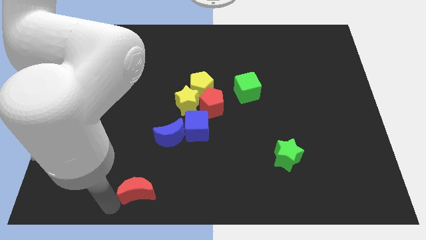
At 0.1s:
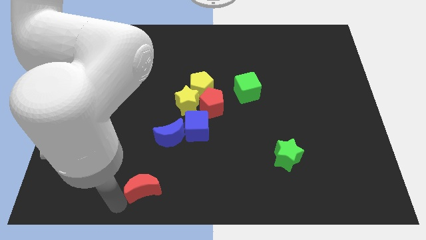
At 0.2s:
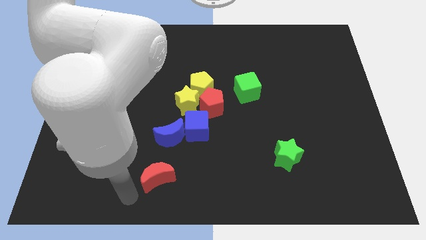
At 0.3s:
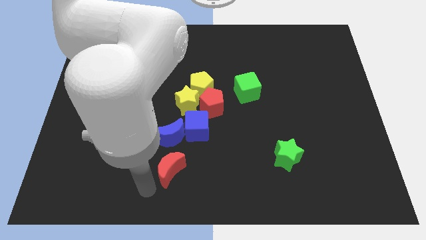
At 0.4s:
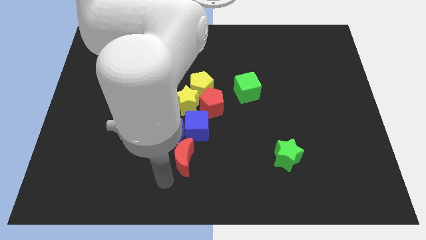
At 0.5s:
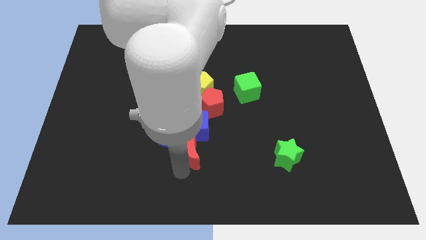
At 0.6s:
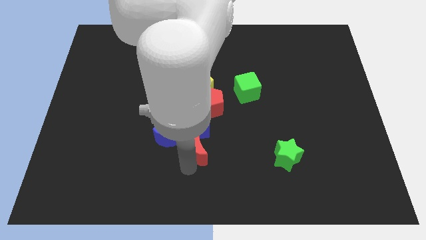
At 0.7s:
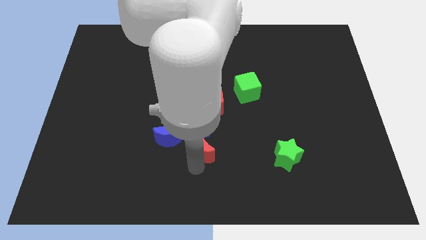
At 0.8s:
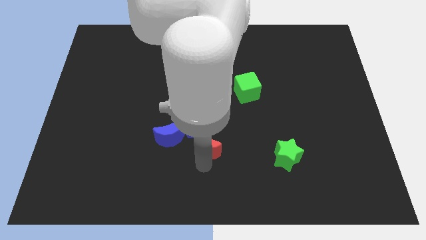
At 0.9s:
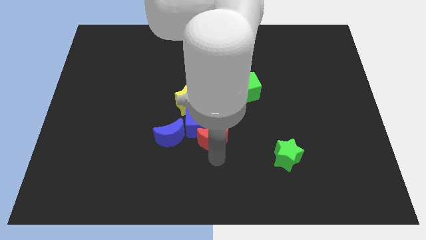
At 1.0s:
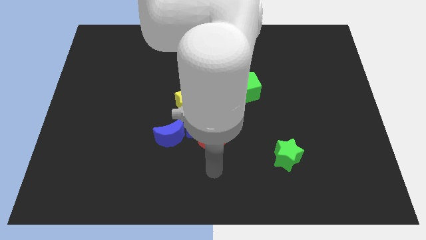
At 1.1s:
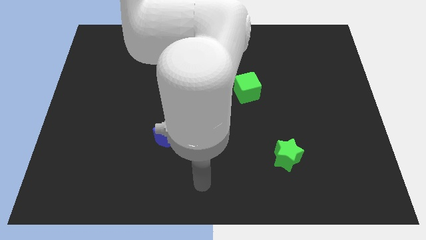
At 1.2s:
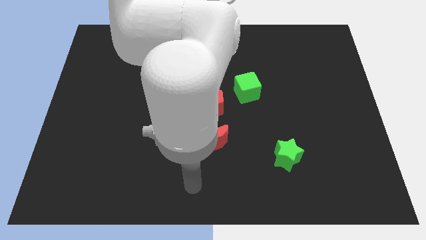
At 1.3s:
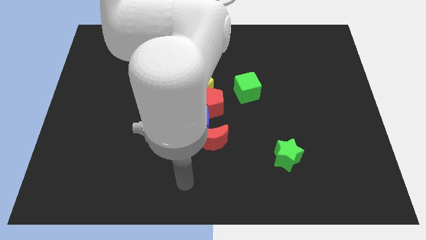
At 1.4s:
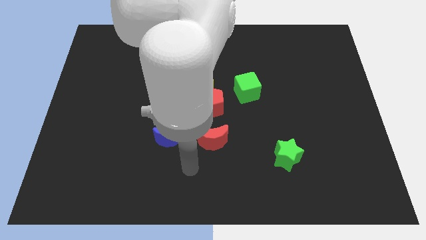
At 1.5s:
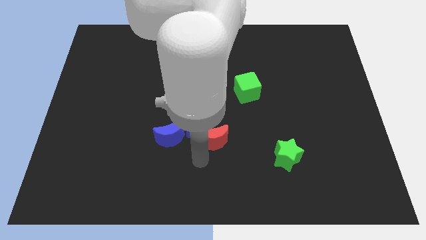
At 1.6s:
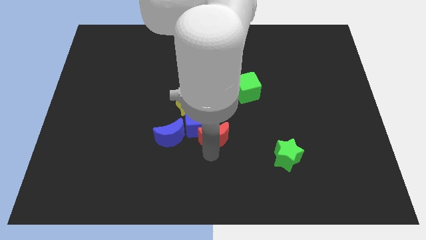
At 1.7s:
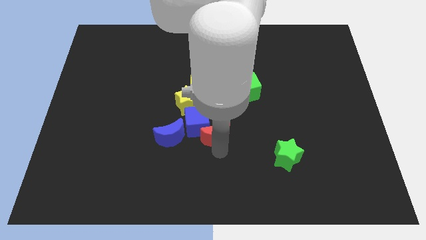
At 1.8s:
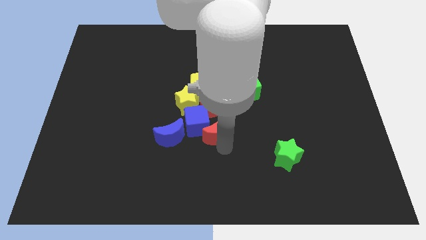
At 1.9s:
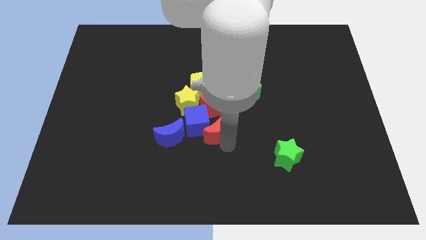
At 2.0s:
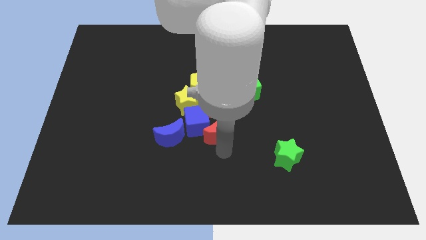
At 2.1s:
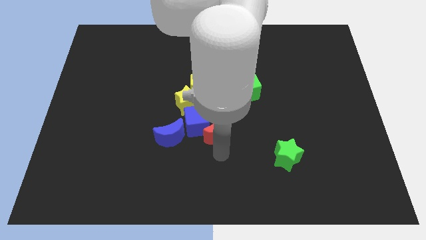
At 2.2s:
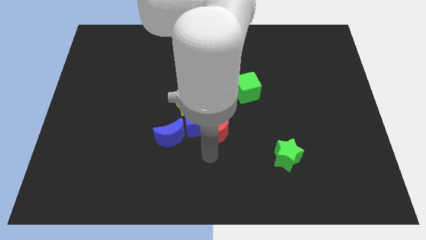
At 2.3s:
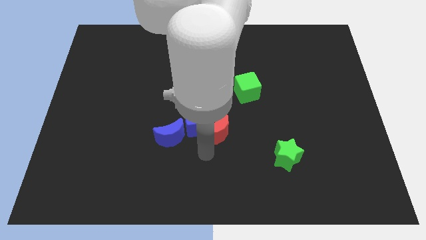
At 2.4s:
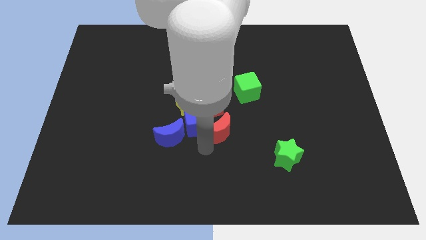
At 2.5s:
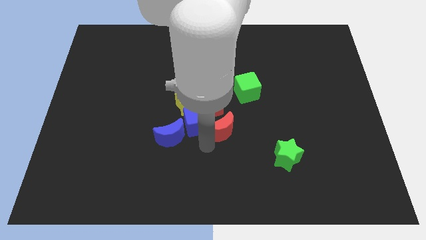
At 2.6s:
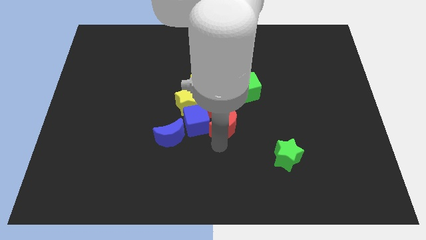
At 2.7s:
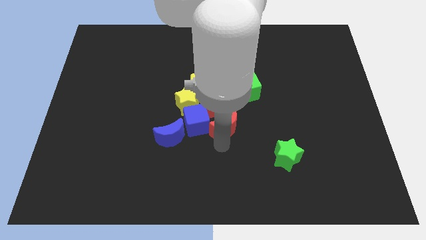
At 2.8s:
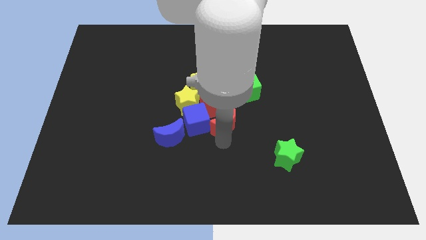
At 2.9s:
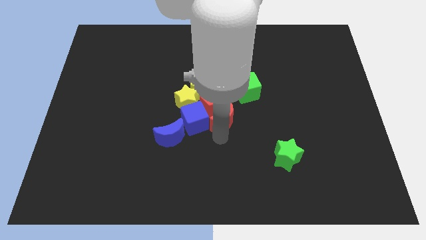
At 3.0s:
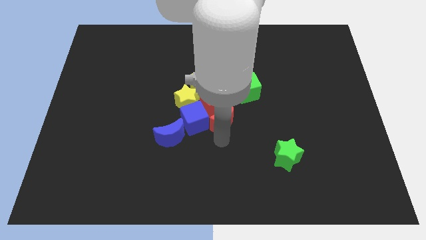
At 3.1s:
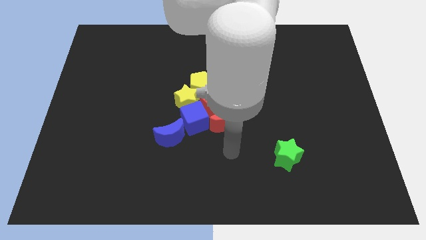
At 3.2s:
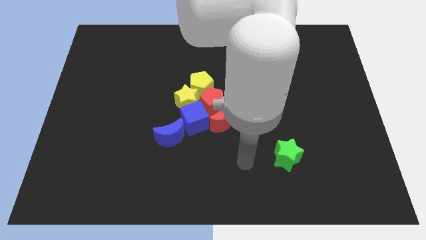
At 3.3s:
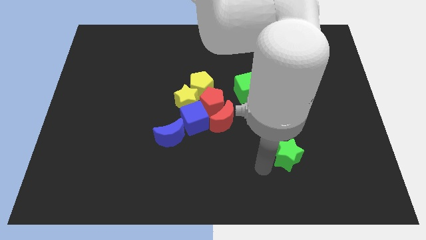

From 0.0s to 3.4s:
push the red crescent into the red pentagon

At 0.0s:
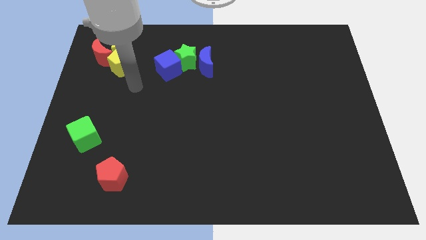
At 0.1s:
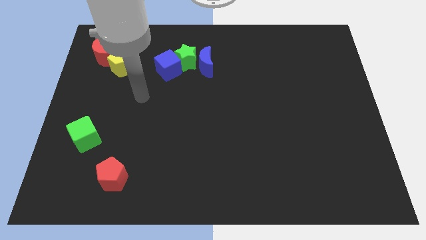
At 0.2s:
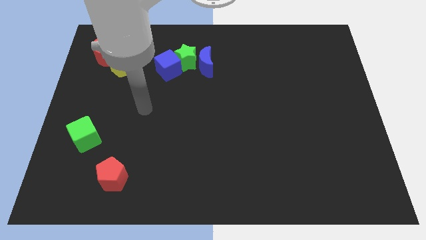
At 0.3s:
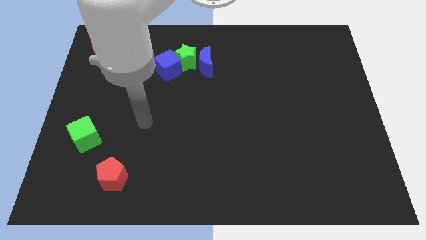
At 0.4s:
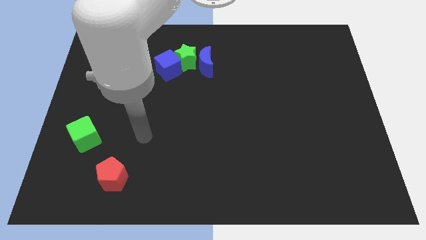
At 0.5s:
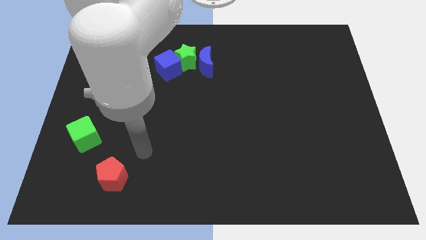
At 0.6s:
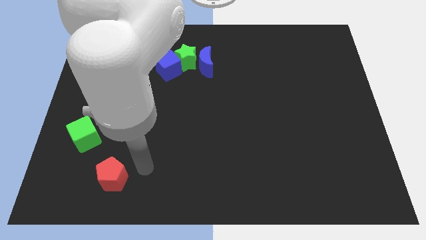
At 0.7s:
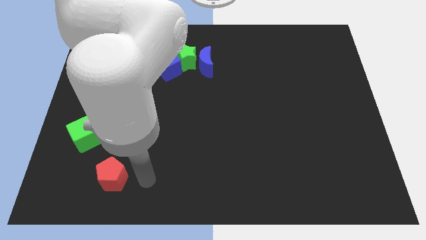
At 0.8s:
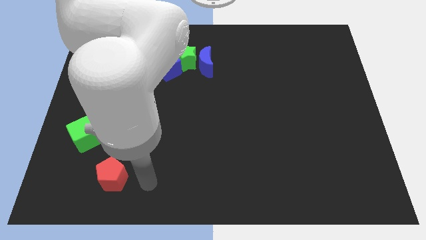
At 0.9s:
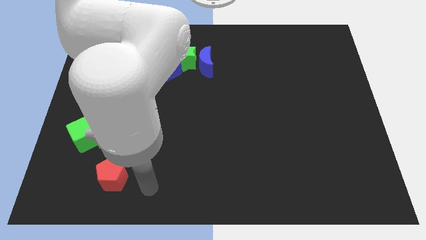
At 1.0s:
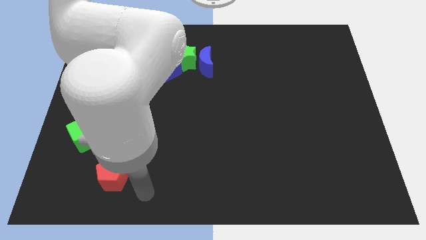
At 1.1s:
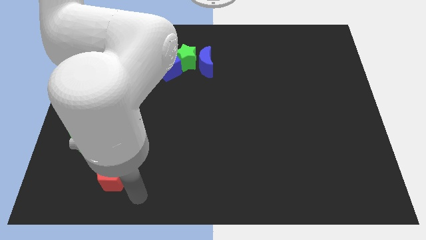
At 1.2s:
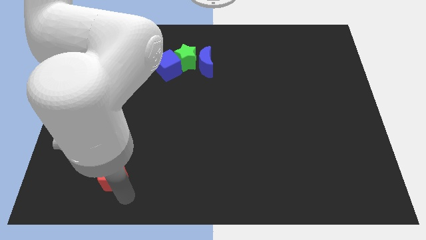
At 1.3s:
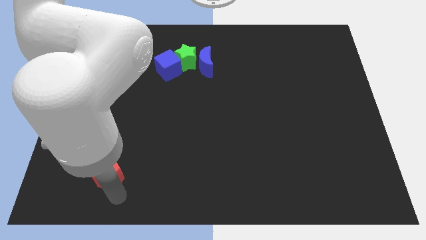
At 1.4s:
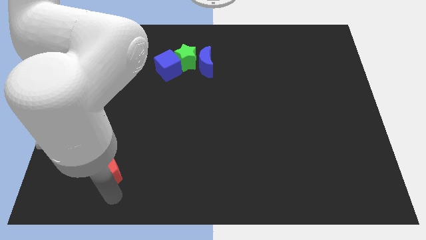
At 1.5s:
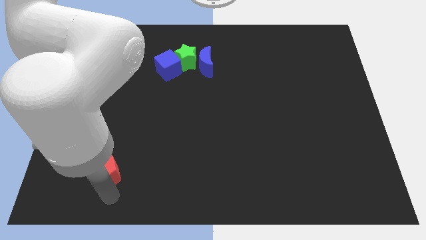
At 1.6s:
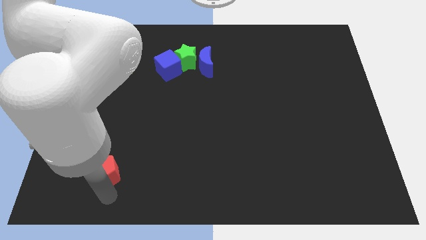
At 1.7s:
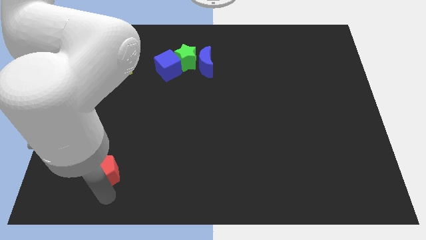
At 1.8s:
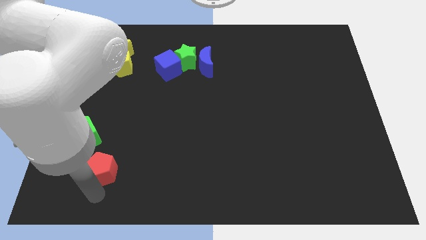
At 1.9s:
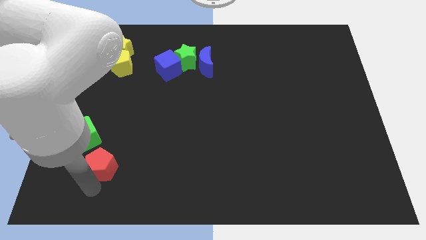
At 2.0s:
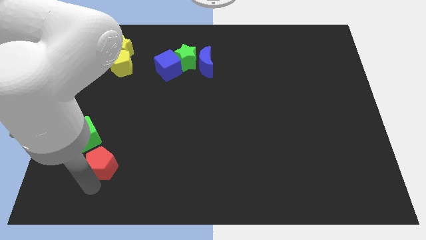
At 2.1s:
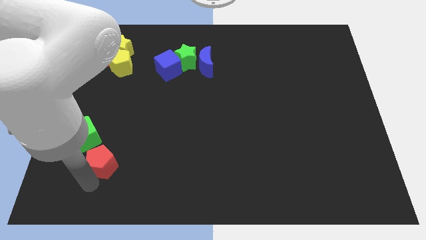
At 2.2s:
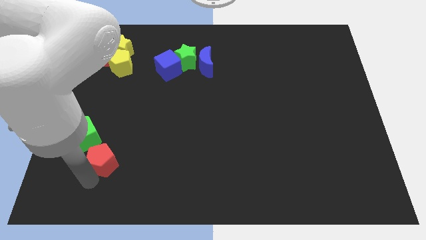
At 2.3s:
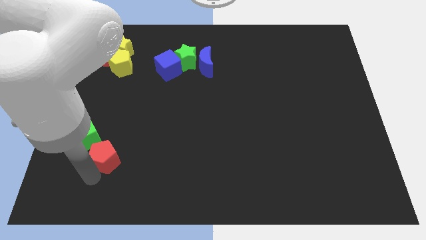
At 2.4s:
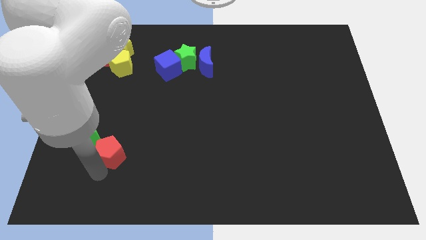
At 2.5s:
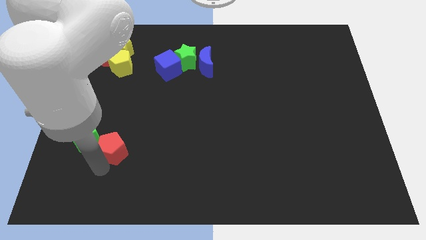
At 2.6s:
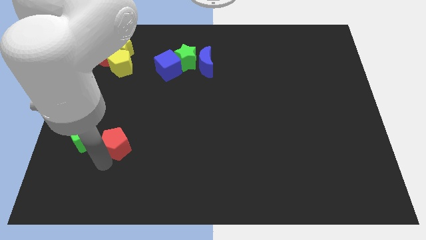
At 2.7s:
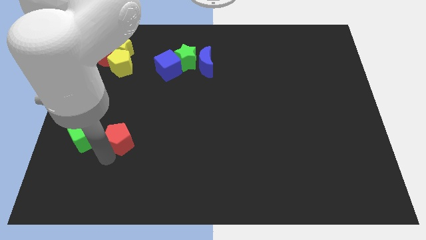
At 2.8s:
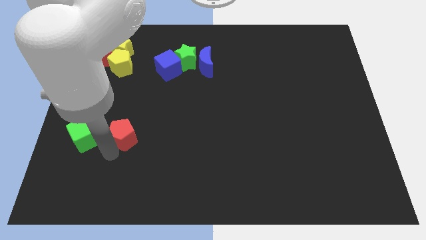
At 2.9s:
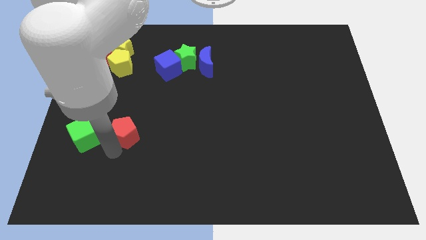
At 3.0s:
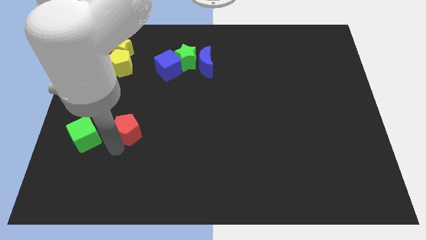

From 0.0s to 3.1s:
place the red pentagon to the right of the green cube

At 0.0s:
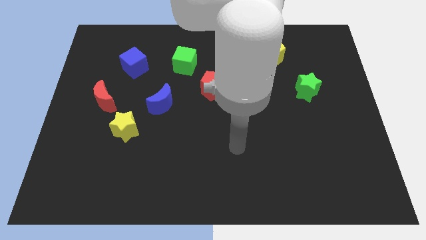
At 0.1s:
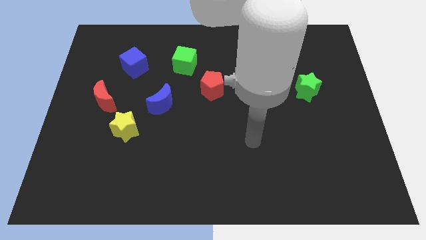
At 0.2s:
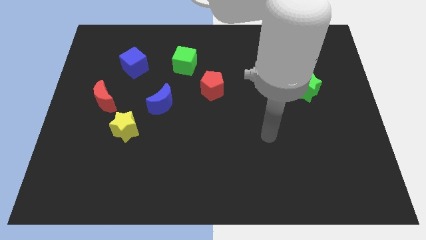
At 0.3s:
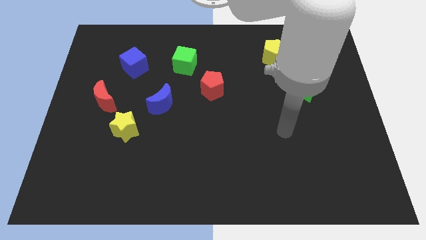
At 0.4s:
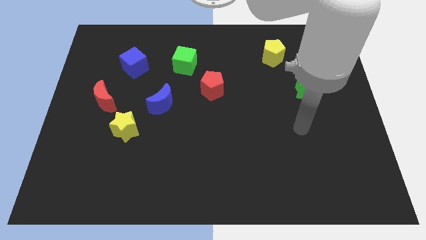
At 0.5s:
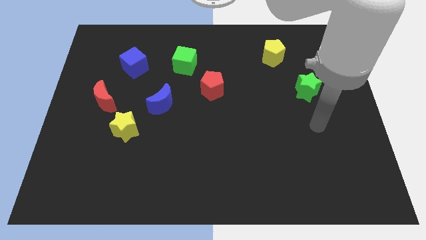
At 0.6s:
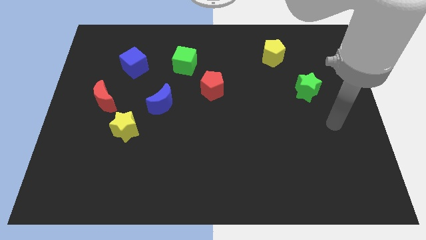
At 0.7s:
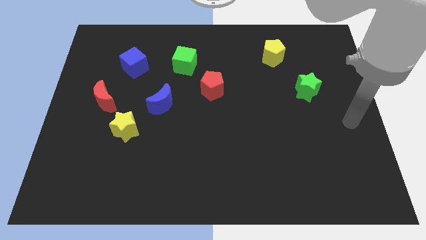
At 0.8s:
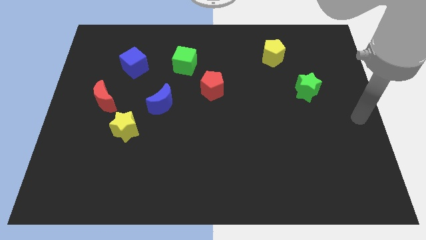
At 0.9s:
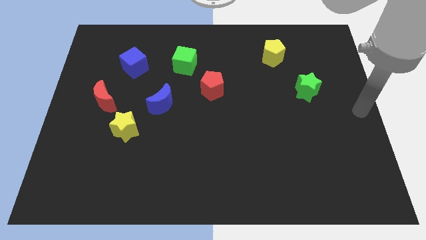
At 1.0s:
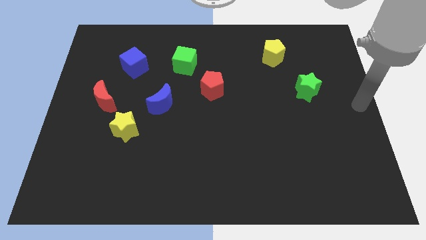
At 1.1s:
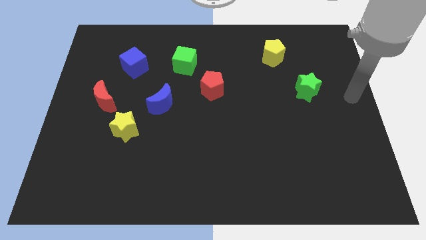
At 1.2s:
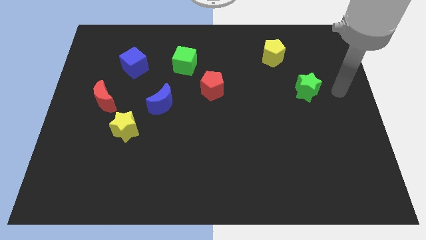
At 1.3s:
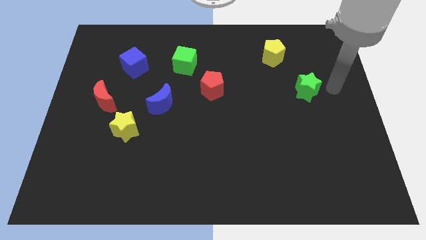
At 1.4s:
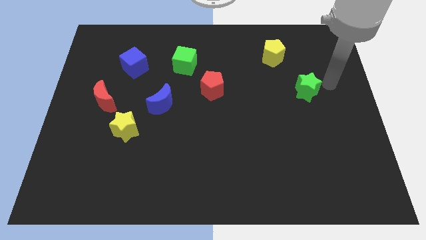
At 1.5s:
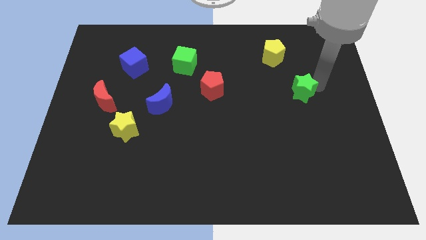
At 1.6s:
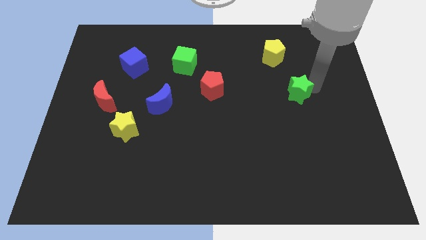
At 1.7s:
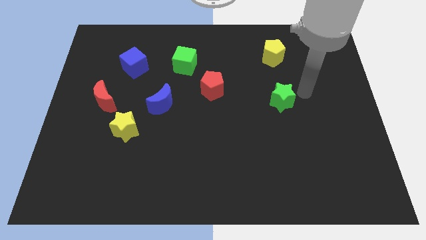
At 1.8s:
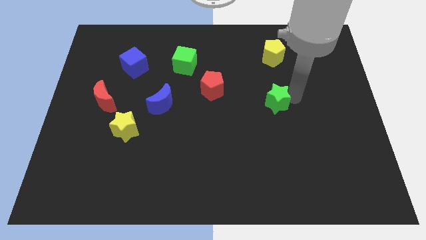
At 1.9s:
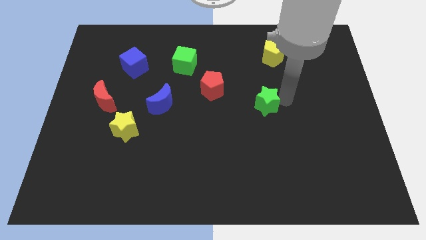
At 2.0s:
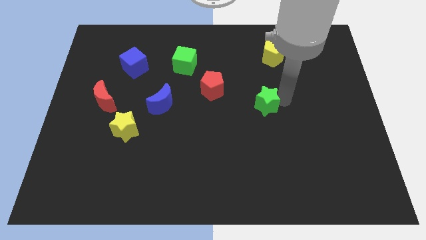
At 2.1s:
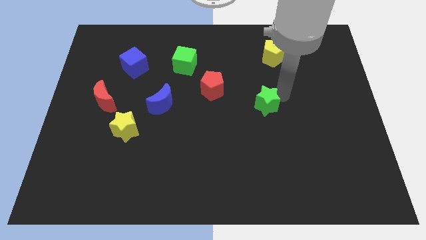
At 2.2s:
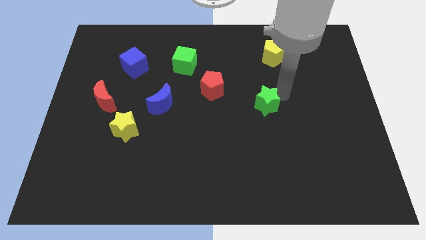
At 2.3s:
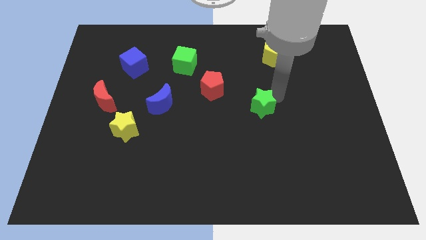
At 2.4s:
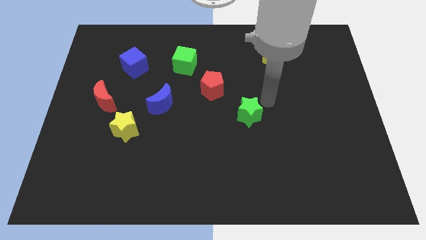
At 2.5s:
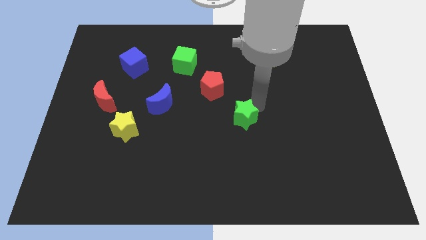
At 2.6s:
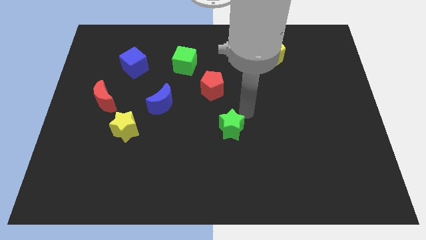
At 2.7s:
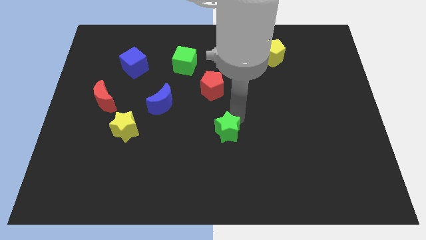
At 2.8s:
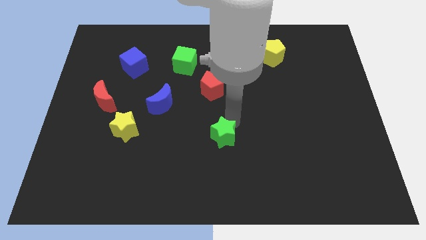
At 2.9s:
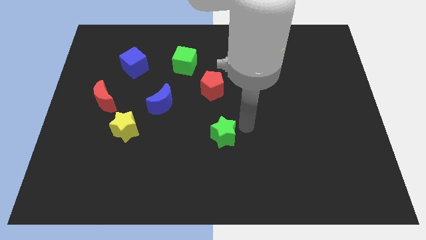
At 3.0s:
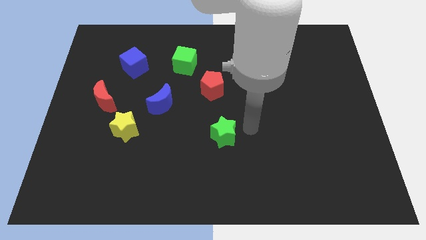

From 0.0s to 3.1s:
move the green star below the red pentagon
